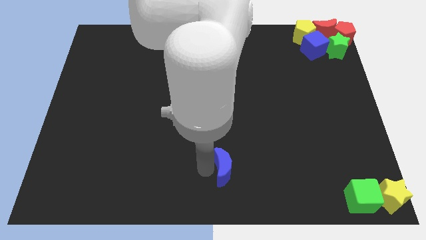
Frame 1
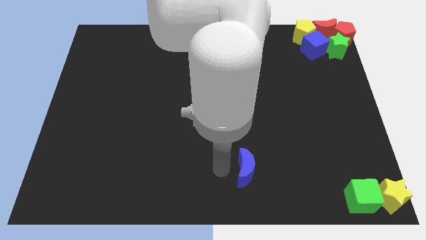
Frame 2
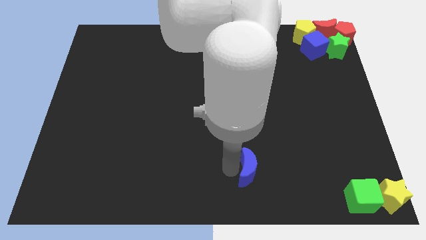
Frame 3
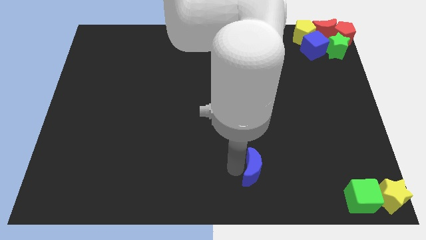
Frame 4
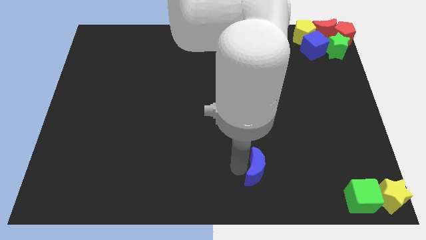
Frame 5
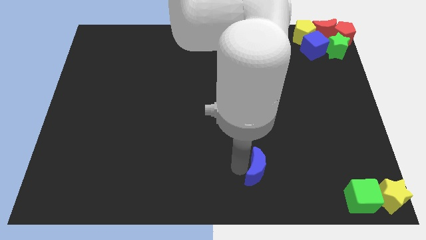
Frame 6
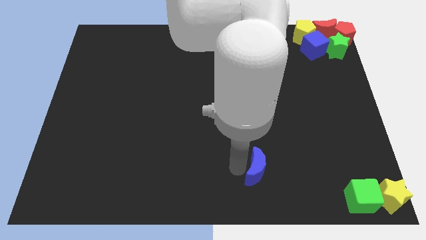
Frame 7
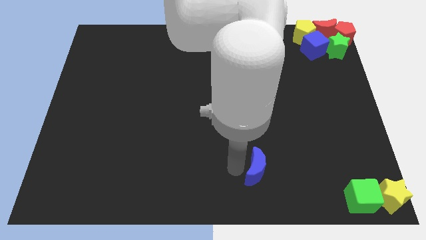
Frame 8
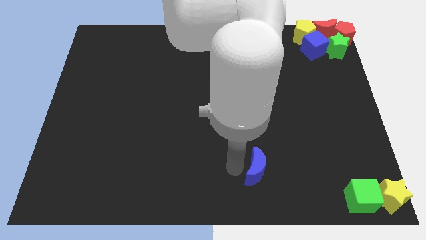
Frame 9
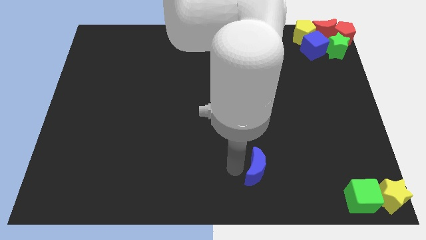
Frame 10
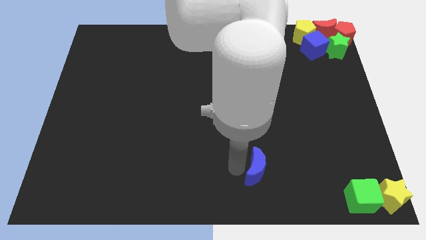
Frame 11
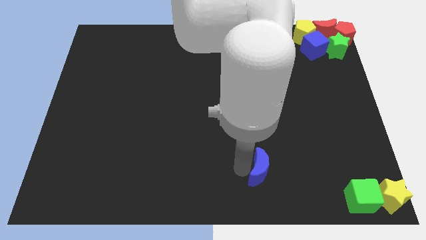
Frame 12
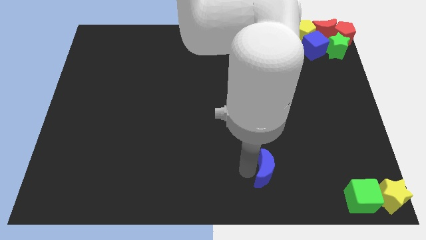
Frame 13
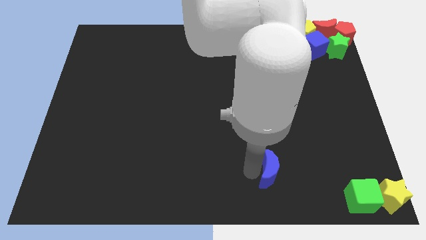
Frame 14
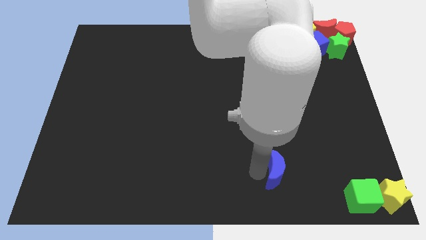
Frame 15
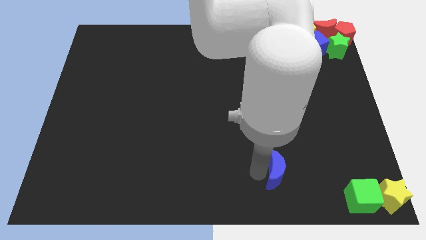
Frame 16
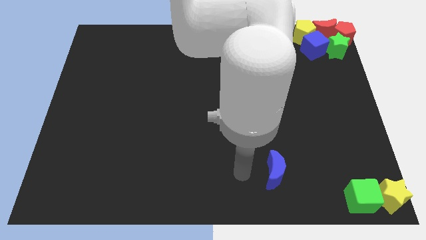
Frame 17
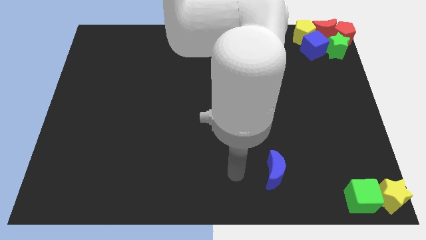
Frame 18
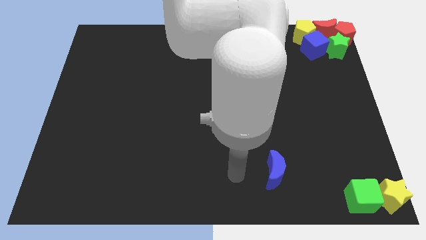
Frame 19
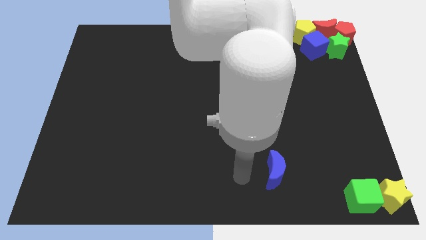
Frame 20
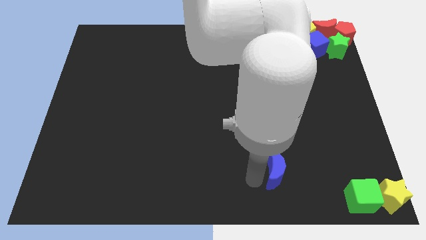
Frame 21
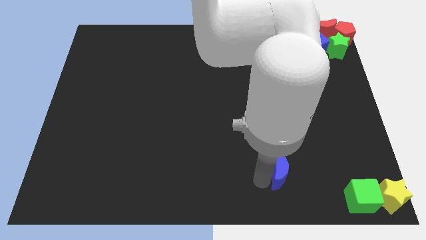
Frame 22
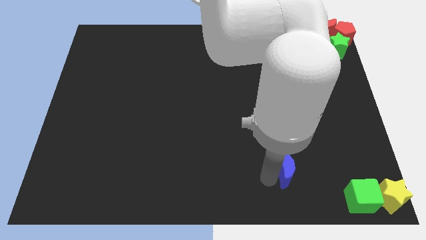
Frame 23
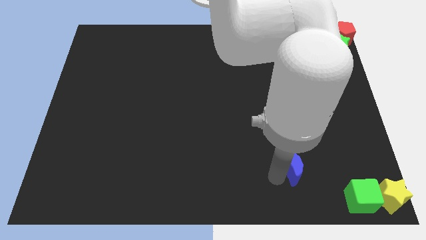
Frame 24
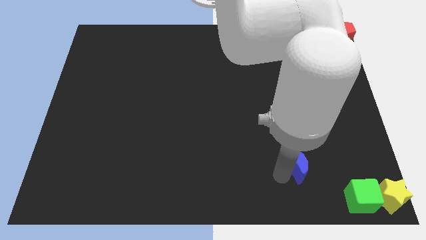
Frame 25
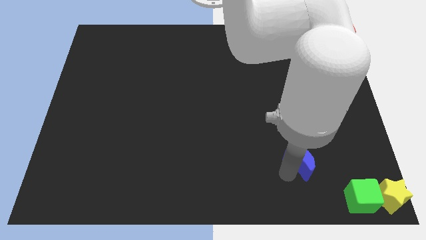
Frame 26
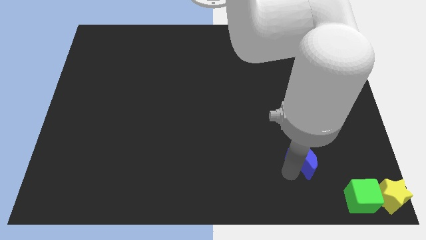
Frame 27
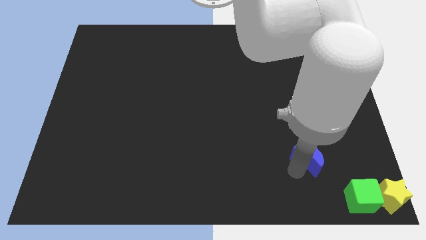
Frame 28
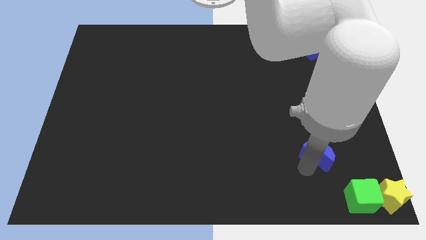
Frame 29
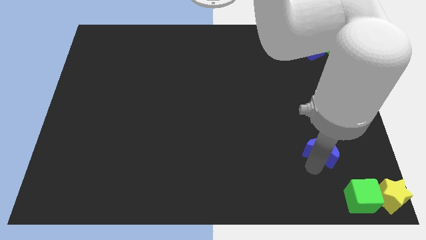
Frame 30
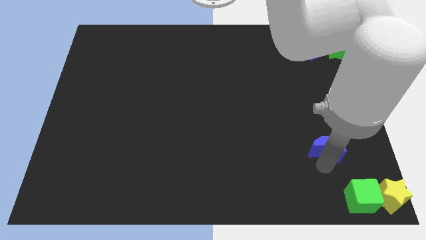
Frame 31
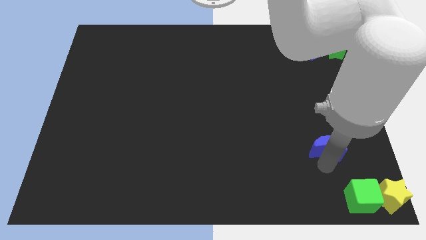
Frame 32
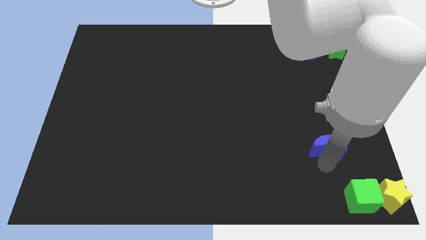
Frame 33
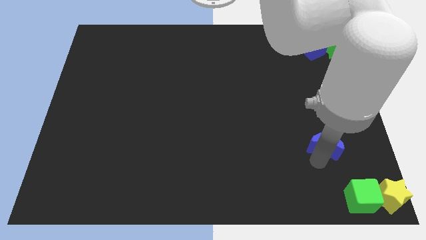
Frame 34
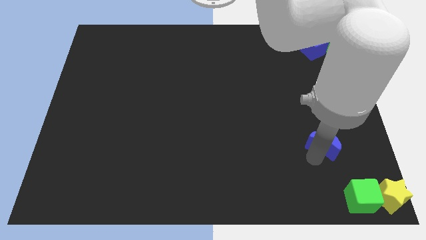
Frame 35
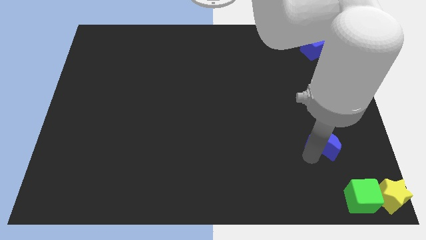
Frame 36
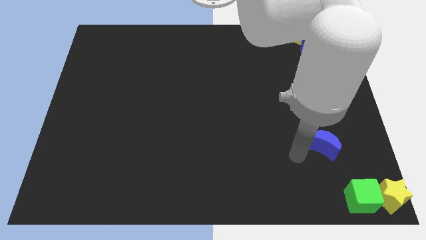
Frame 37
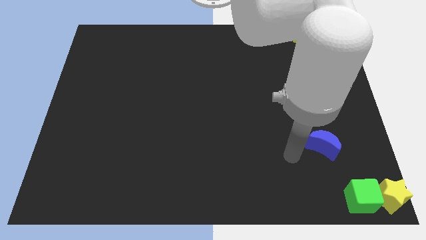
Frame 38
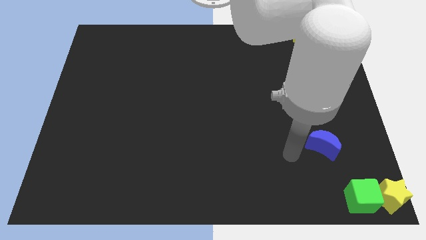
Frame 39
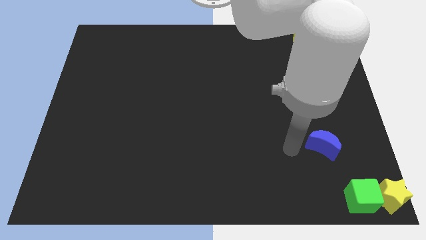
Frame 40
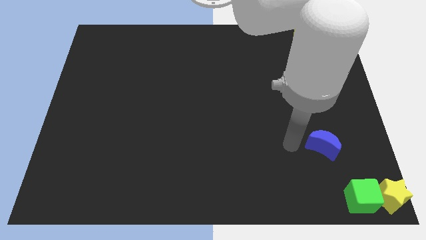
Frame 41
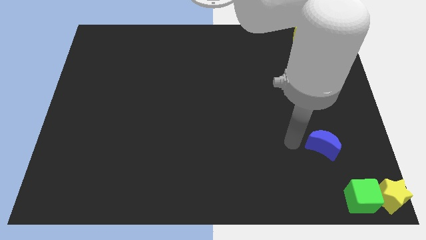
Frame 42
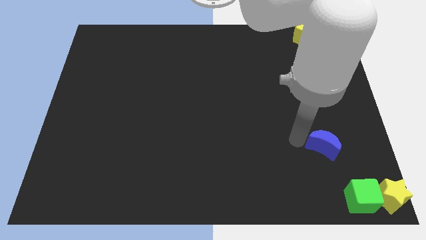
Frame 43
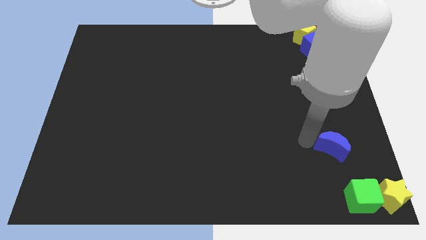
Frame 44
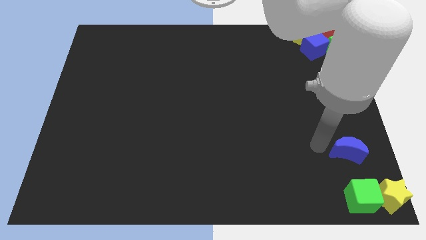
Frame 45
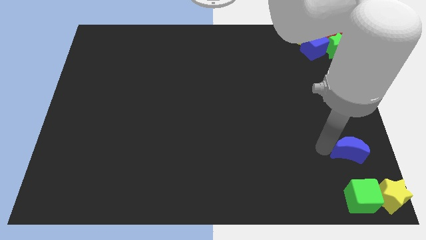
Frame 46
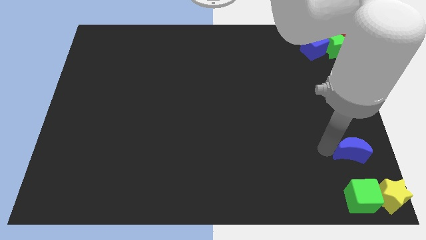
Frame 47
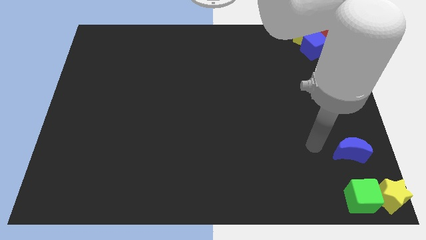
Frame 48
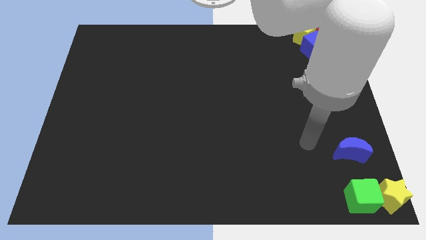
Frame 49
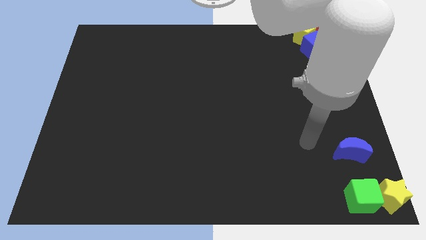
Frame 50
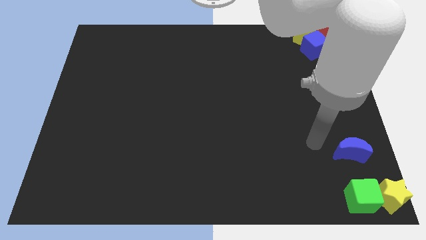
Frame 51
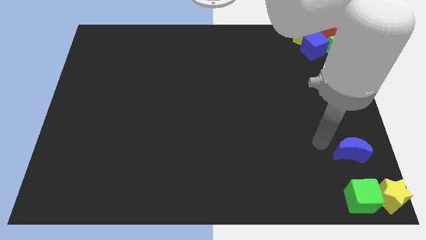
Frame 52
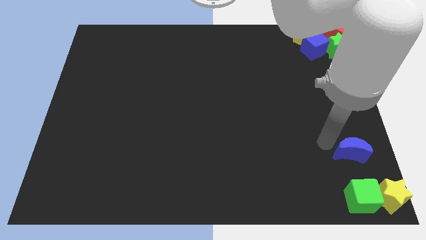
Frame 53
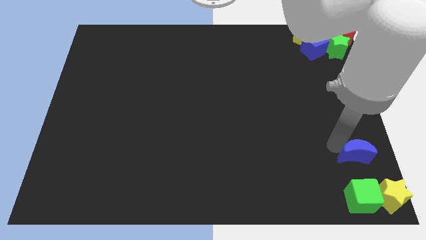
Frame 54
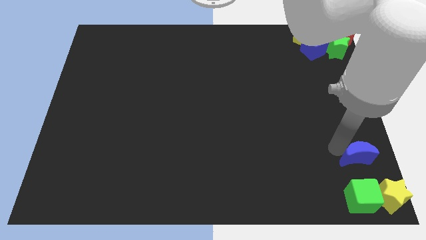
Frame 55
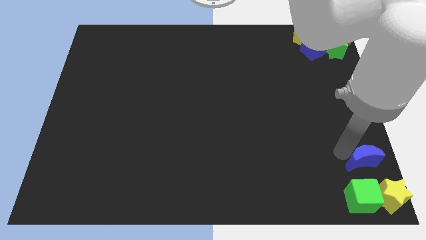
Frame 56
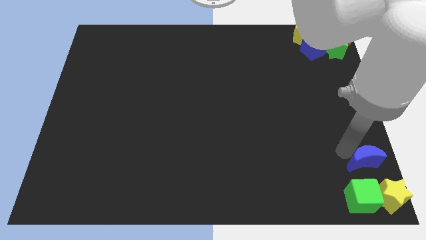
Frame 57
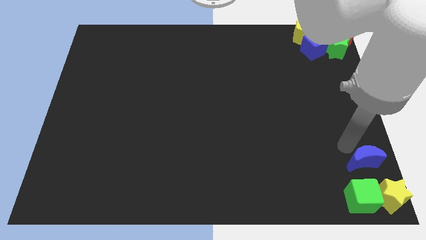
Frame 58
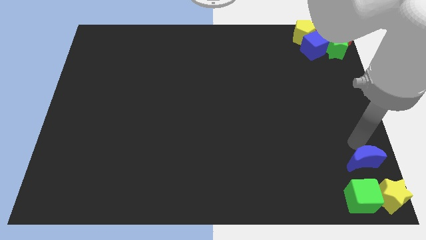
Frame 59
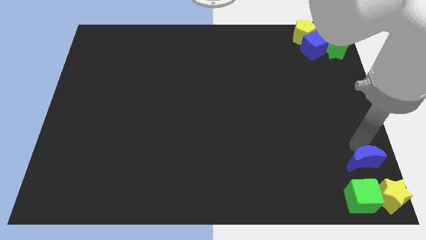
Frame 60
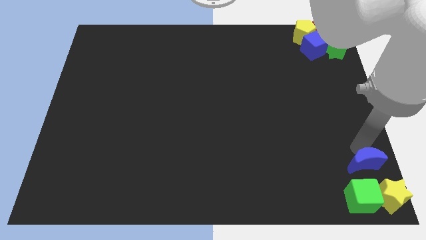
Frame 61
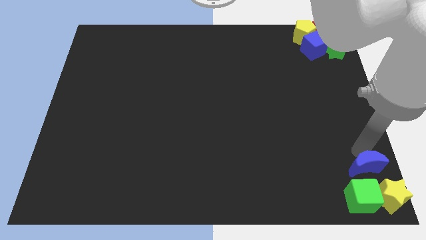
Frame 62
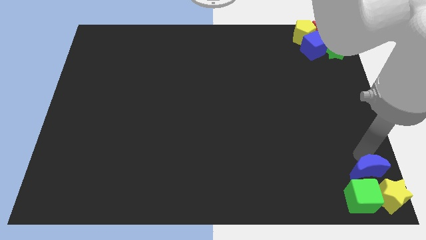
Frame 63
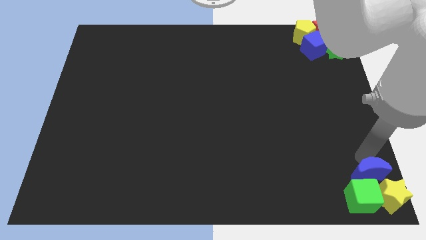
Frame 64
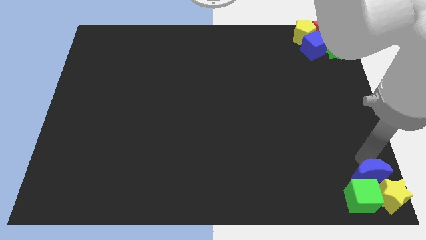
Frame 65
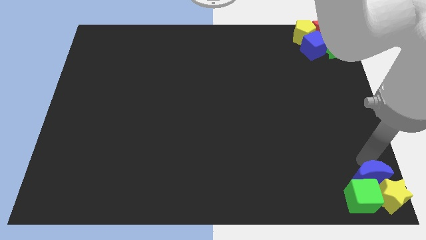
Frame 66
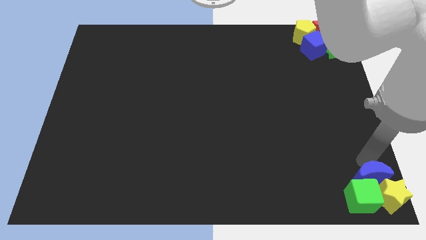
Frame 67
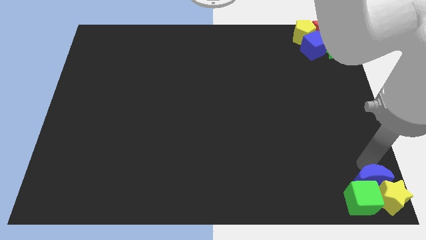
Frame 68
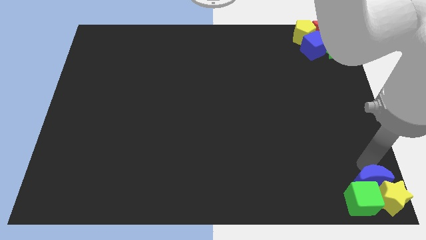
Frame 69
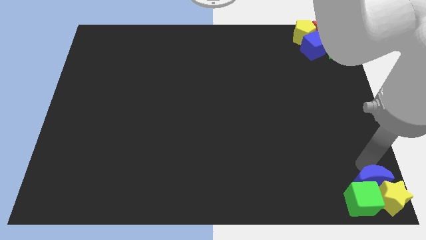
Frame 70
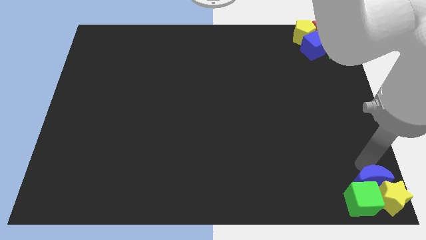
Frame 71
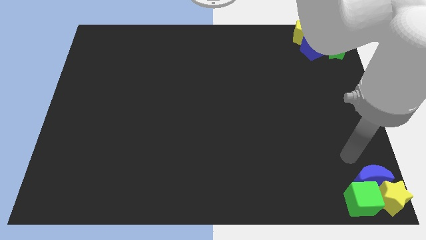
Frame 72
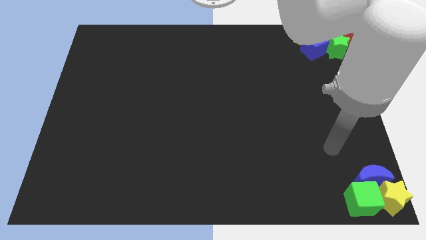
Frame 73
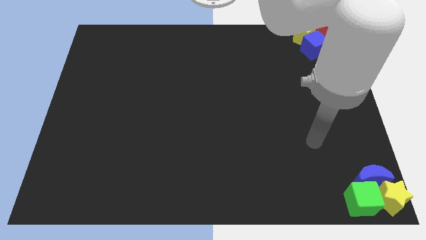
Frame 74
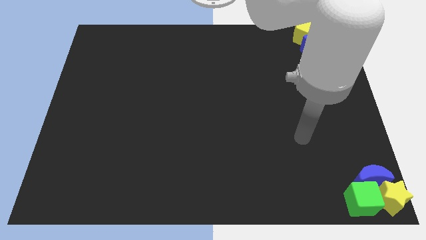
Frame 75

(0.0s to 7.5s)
move the blue crescent to the bottom right of the board

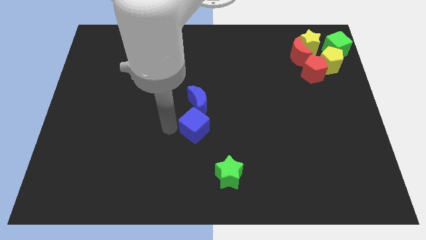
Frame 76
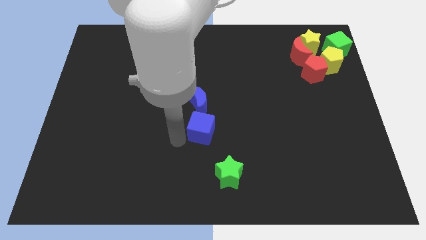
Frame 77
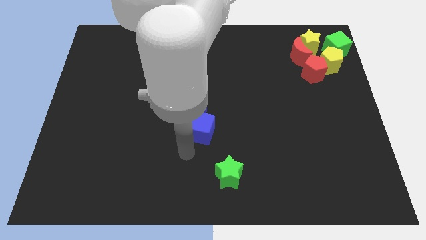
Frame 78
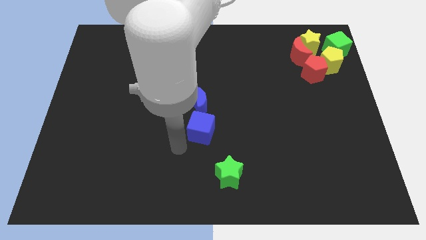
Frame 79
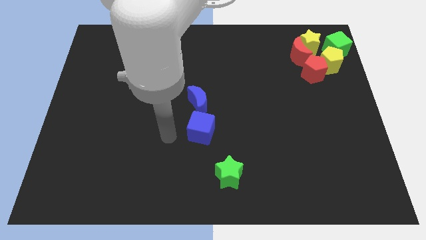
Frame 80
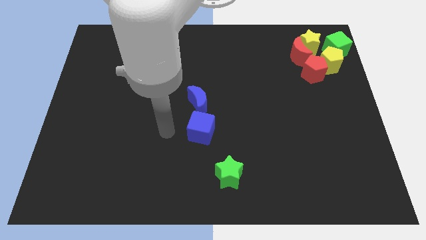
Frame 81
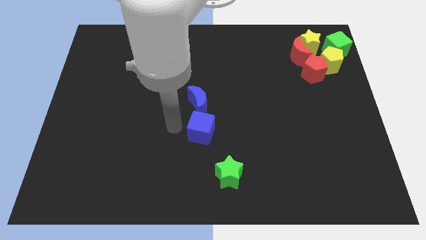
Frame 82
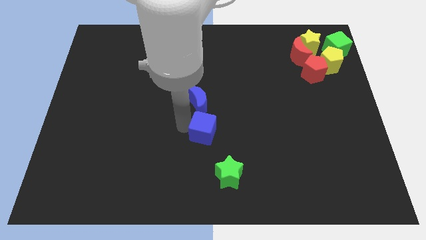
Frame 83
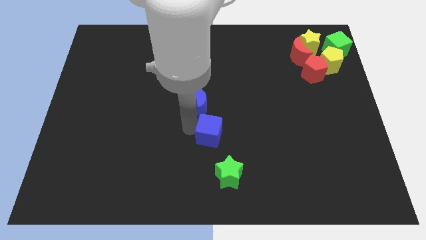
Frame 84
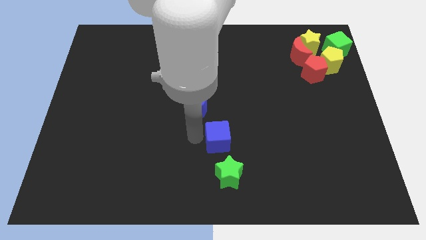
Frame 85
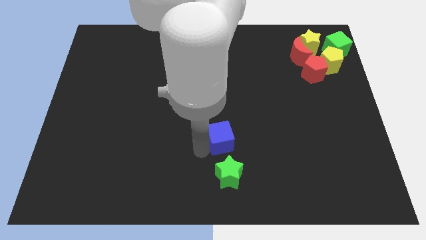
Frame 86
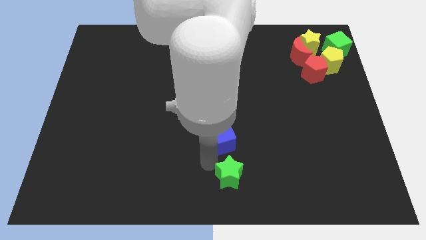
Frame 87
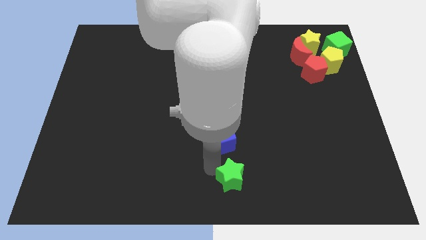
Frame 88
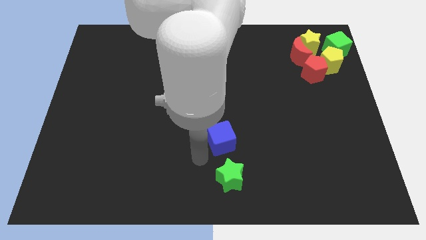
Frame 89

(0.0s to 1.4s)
place the blue cube in between green star and blue moon
